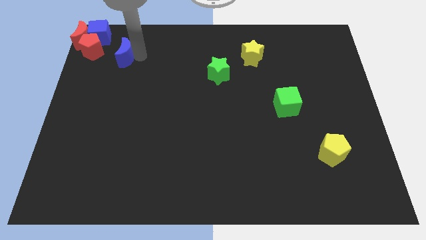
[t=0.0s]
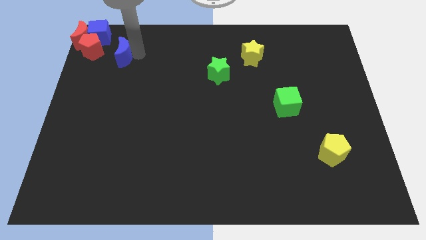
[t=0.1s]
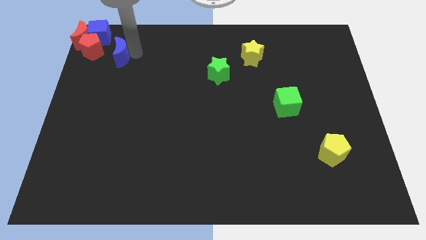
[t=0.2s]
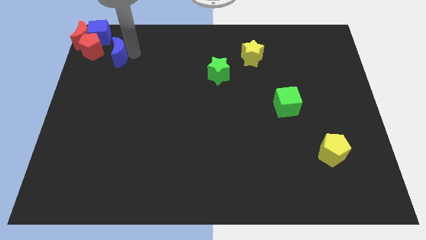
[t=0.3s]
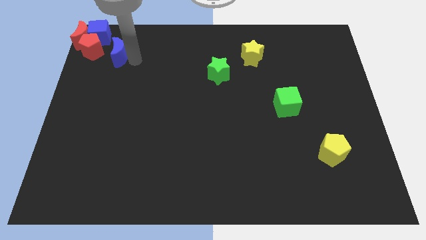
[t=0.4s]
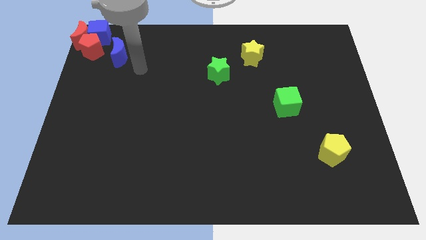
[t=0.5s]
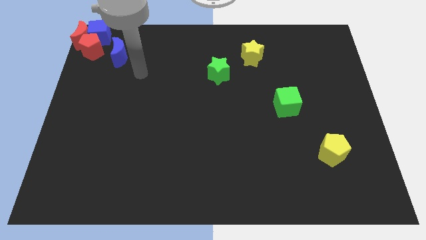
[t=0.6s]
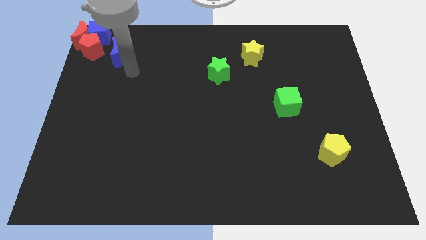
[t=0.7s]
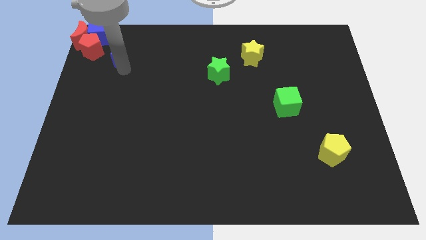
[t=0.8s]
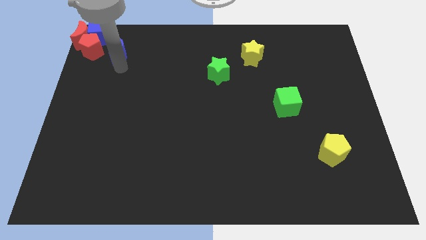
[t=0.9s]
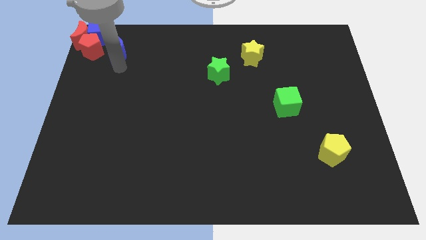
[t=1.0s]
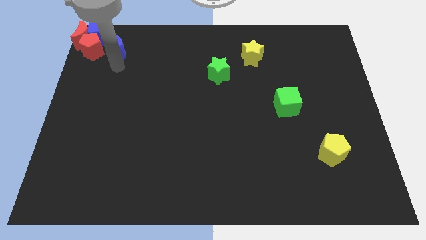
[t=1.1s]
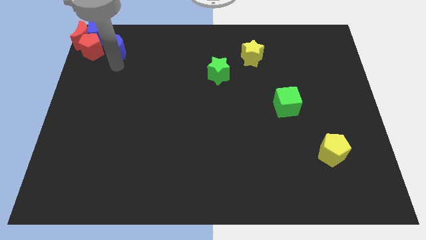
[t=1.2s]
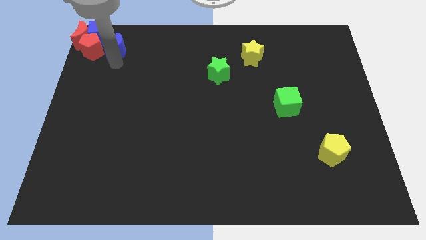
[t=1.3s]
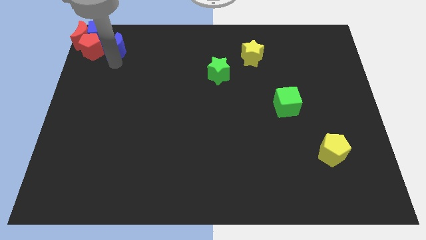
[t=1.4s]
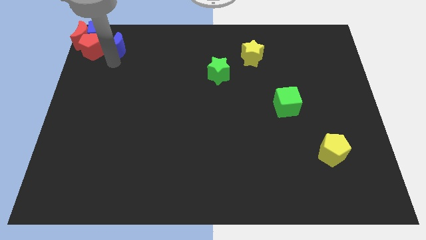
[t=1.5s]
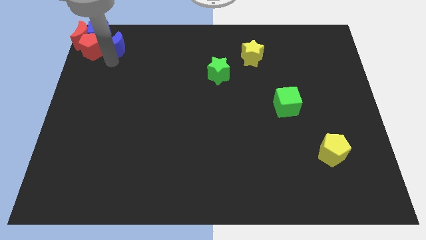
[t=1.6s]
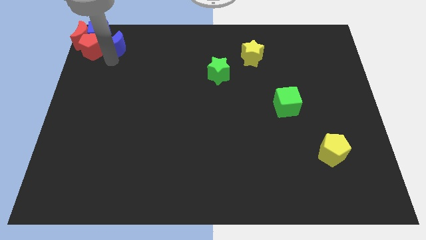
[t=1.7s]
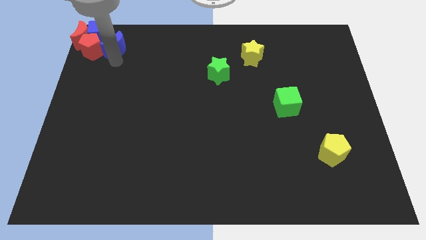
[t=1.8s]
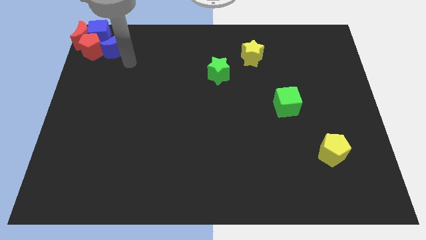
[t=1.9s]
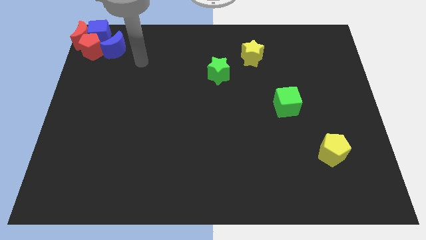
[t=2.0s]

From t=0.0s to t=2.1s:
push blue moon to the right of red pentagon

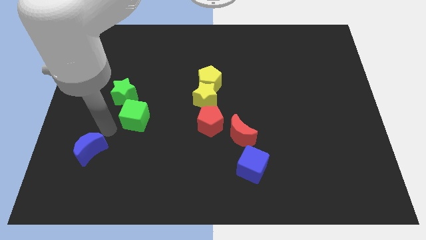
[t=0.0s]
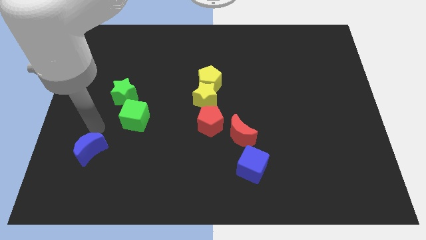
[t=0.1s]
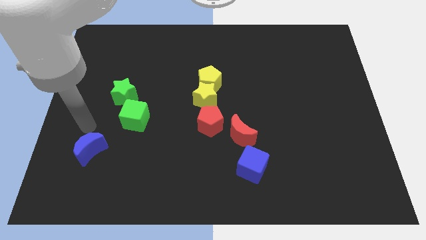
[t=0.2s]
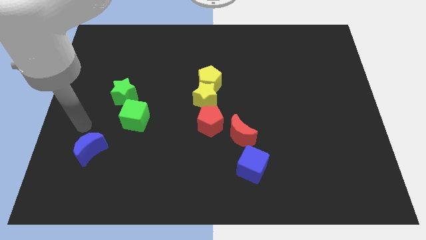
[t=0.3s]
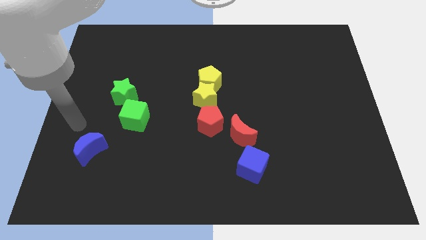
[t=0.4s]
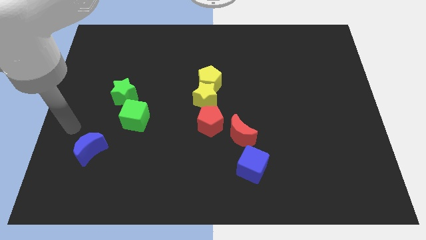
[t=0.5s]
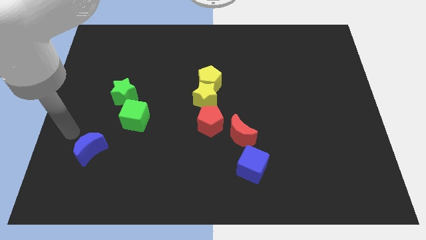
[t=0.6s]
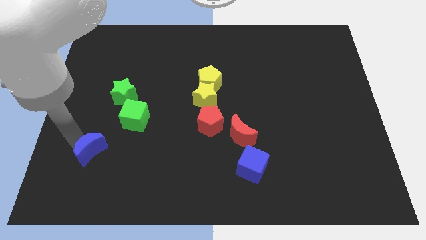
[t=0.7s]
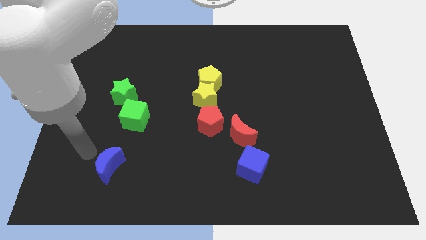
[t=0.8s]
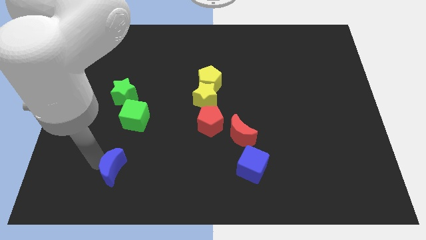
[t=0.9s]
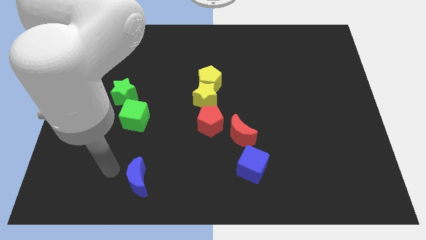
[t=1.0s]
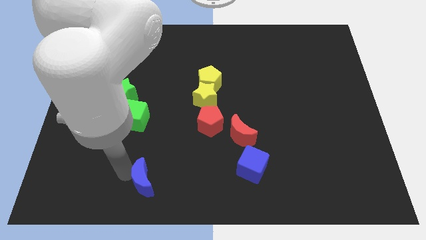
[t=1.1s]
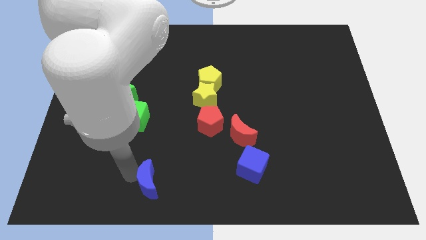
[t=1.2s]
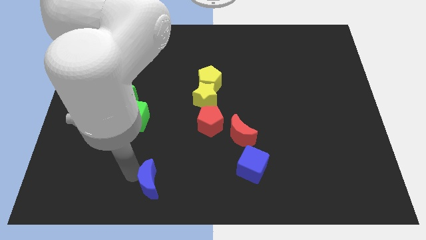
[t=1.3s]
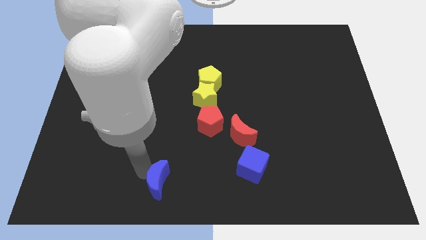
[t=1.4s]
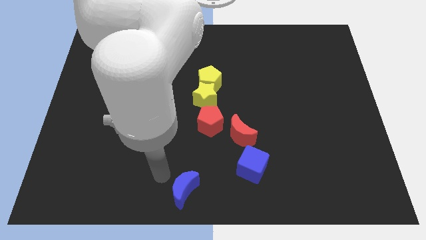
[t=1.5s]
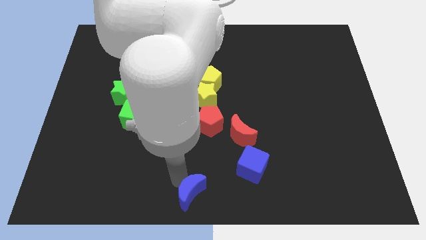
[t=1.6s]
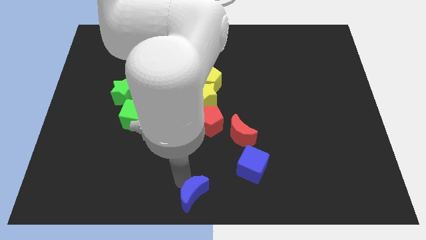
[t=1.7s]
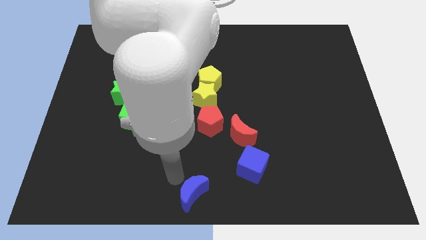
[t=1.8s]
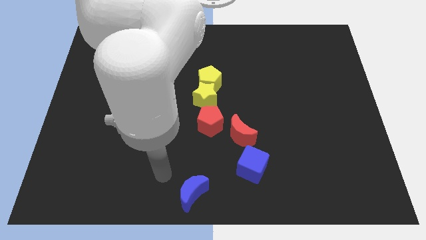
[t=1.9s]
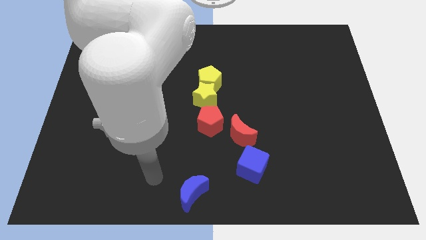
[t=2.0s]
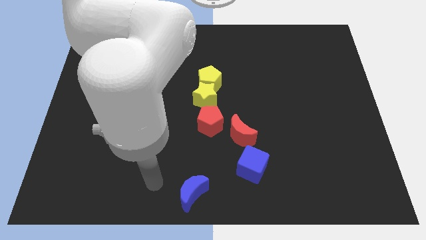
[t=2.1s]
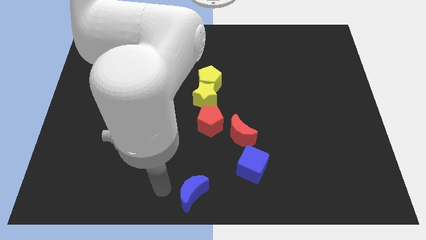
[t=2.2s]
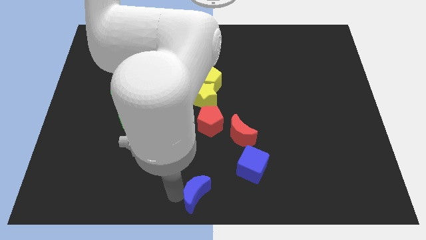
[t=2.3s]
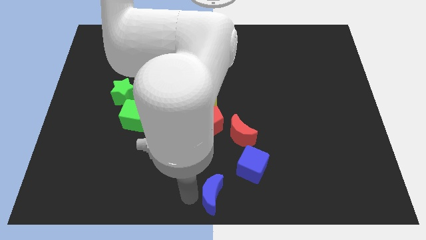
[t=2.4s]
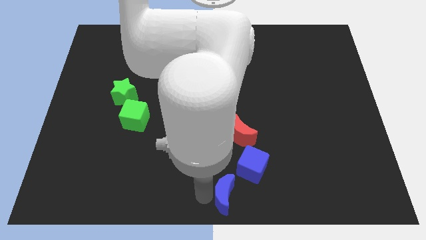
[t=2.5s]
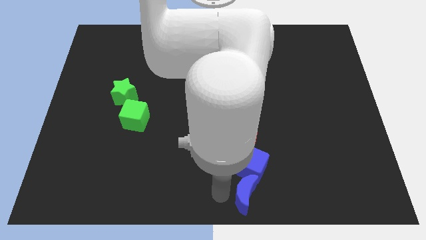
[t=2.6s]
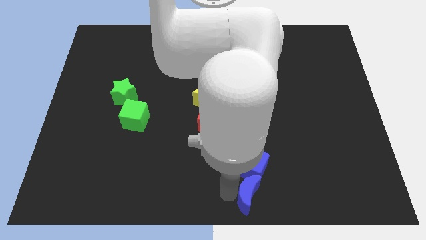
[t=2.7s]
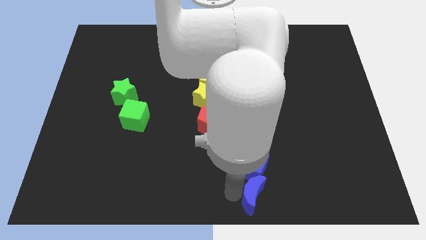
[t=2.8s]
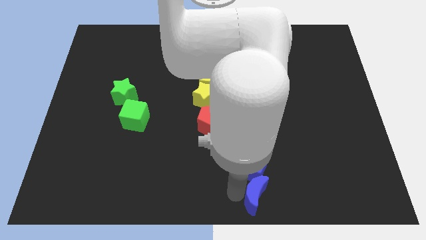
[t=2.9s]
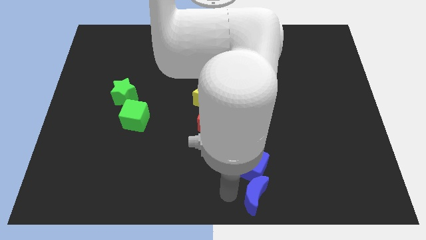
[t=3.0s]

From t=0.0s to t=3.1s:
push the blue crescent to the bottom of the blue cube

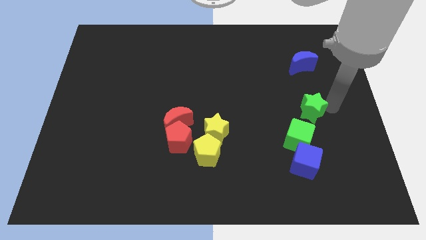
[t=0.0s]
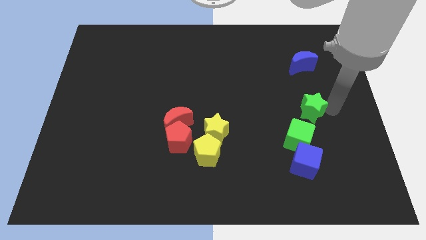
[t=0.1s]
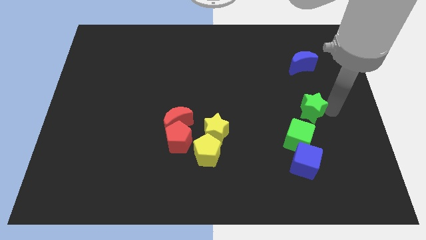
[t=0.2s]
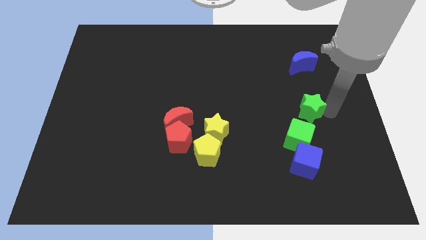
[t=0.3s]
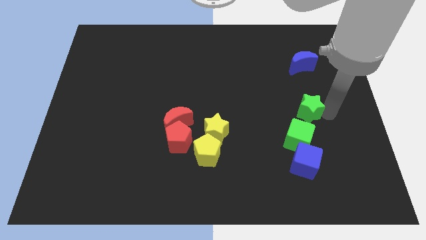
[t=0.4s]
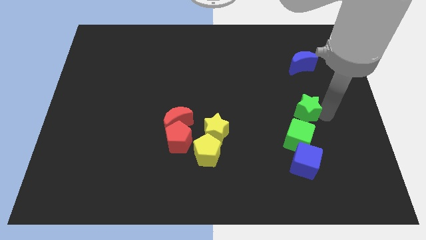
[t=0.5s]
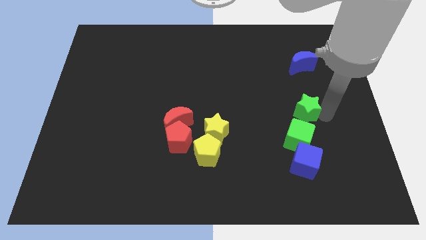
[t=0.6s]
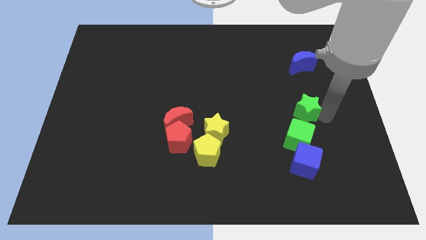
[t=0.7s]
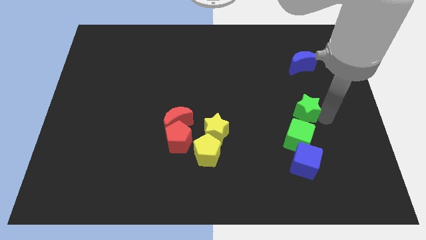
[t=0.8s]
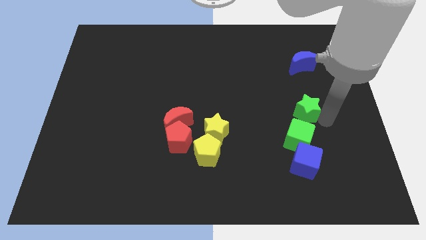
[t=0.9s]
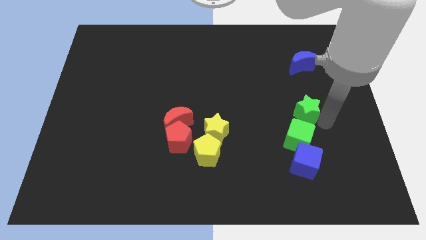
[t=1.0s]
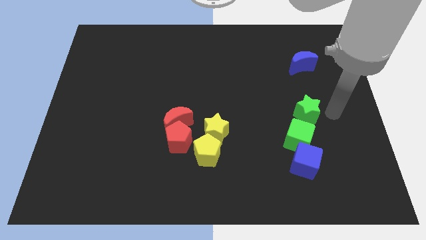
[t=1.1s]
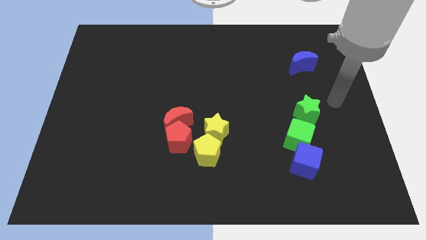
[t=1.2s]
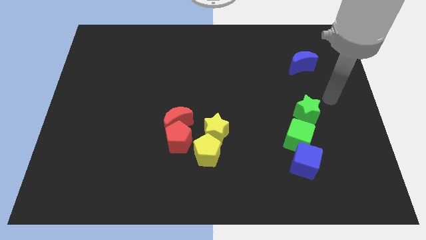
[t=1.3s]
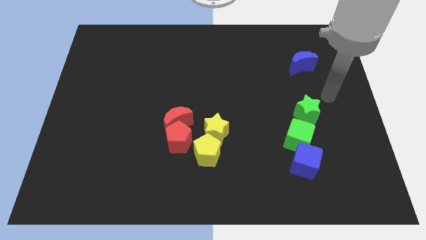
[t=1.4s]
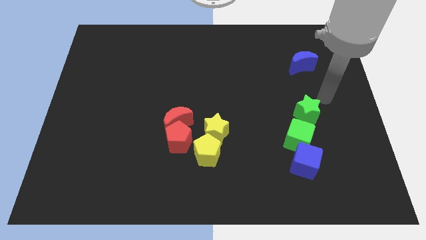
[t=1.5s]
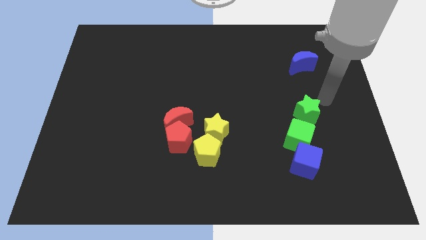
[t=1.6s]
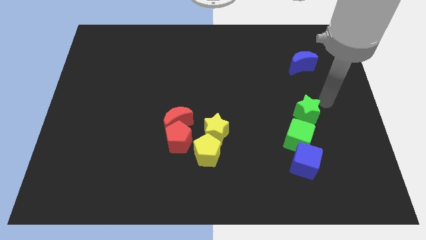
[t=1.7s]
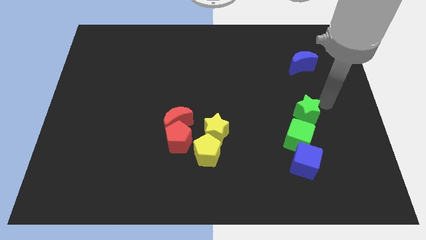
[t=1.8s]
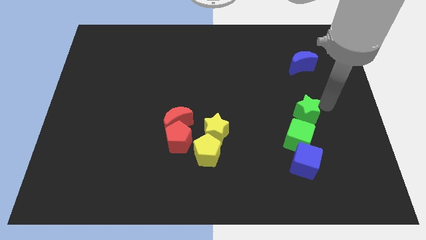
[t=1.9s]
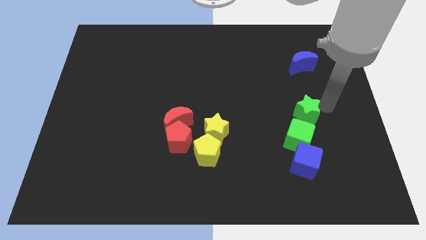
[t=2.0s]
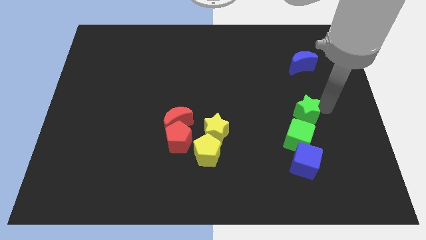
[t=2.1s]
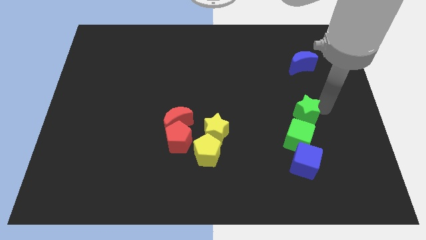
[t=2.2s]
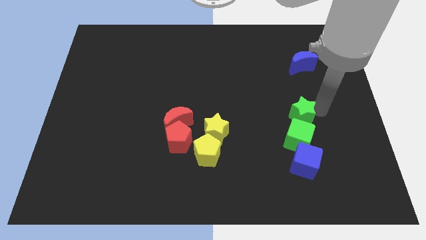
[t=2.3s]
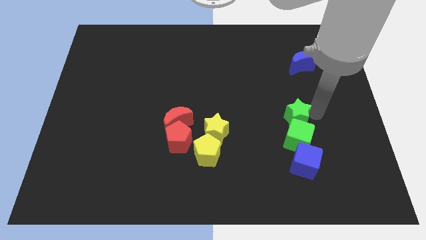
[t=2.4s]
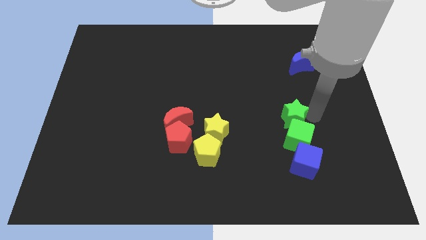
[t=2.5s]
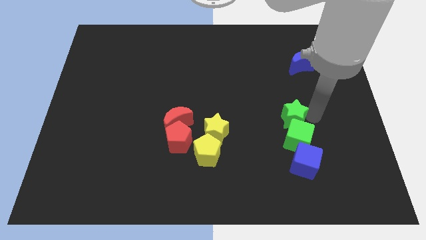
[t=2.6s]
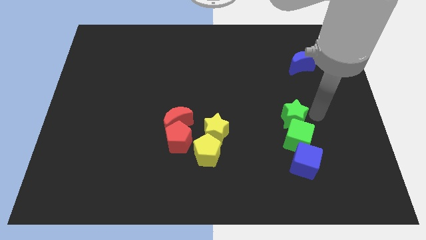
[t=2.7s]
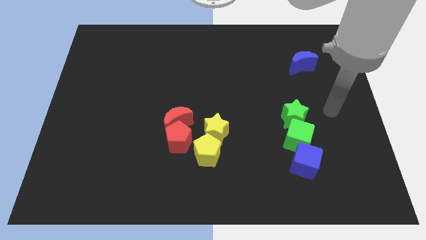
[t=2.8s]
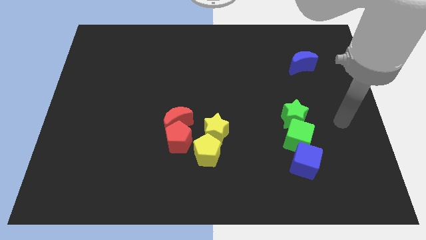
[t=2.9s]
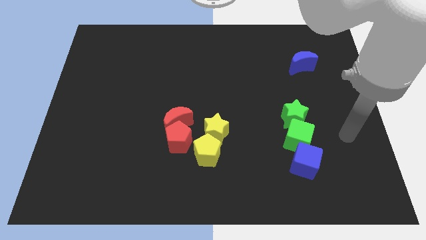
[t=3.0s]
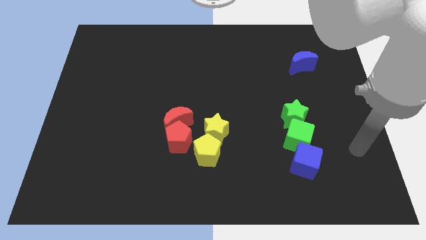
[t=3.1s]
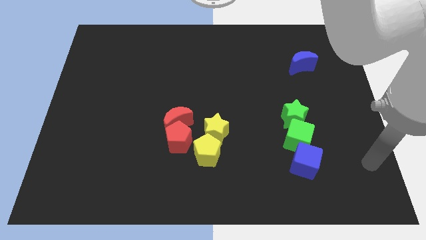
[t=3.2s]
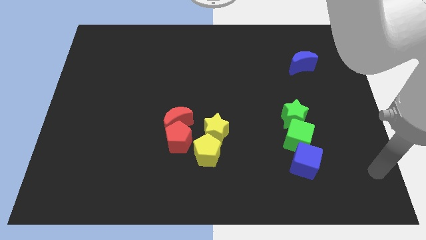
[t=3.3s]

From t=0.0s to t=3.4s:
push the green star close to the green cube

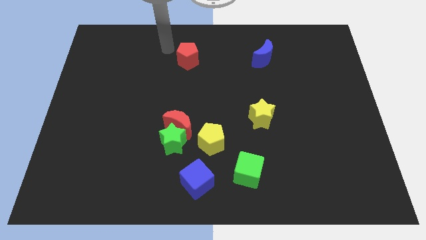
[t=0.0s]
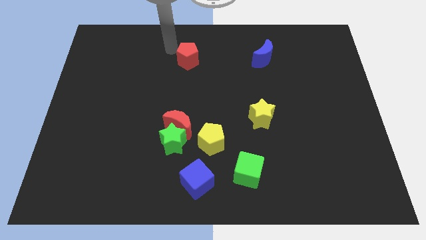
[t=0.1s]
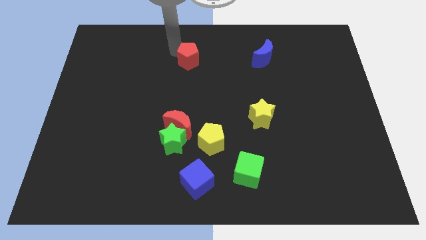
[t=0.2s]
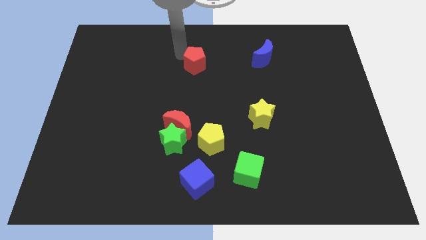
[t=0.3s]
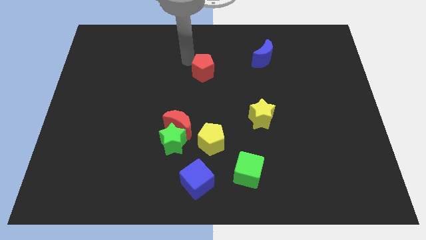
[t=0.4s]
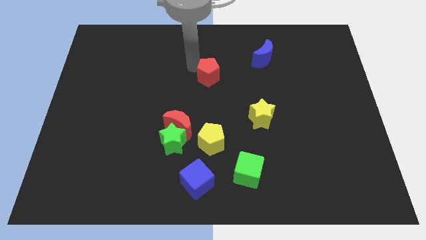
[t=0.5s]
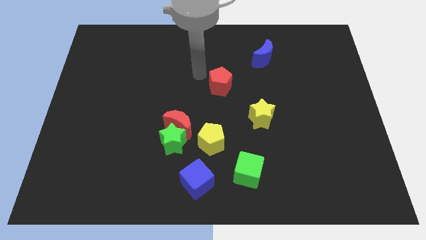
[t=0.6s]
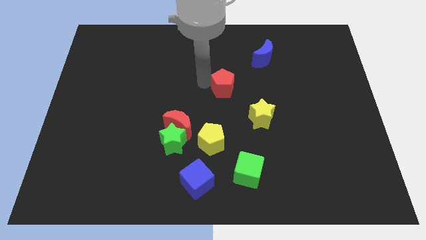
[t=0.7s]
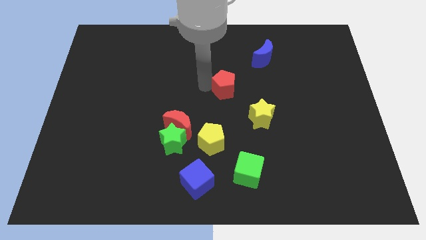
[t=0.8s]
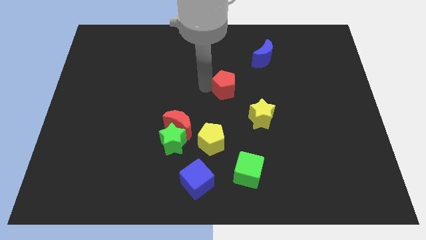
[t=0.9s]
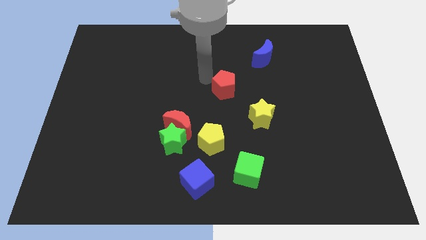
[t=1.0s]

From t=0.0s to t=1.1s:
place the red pentagon beside the blue moon to form a line
